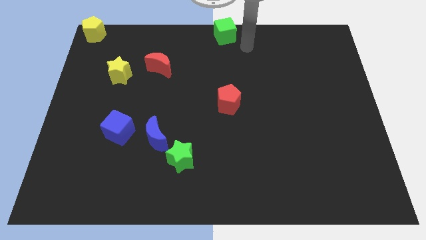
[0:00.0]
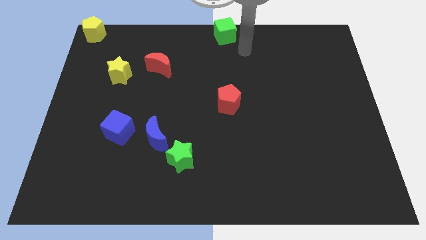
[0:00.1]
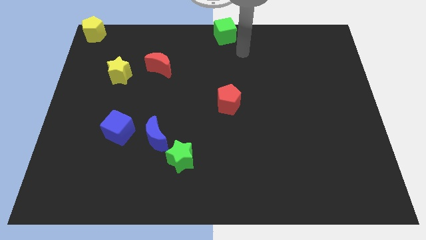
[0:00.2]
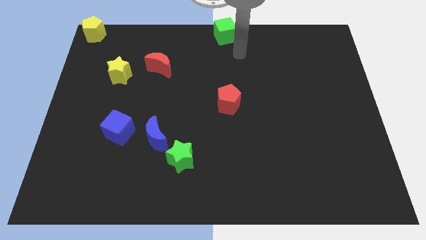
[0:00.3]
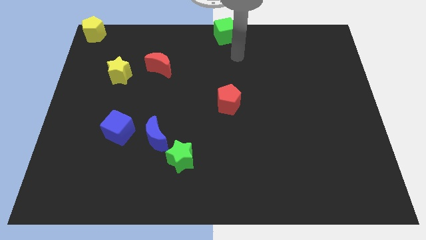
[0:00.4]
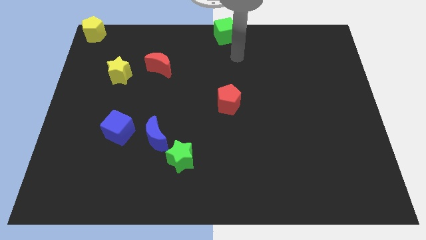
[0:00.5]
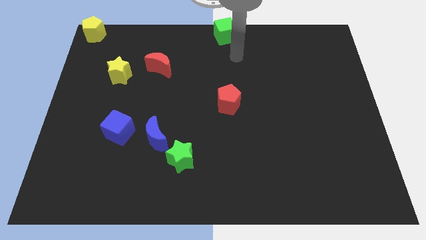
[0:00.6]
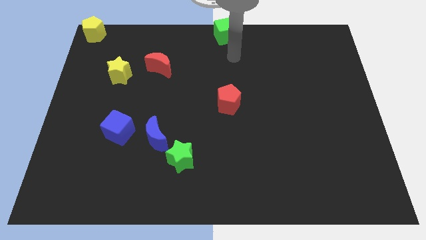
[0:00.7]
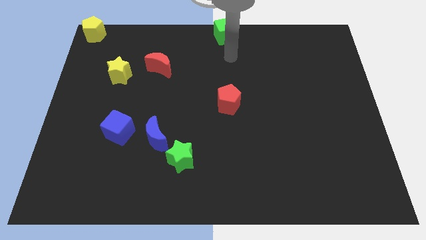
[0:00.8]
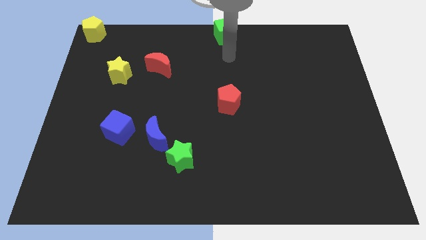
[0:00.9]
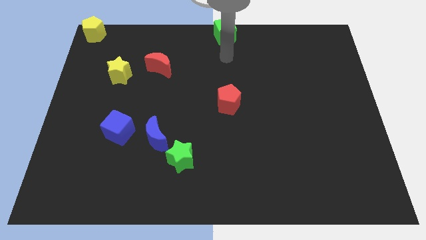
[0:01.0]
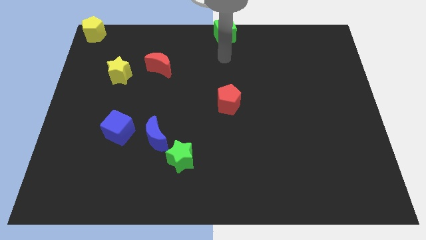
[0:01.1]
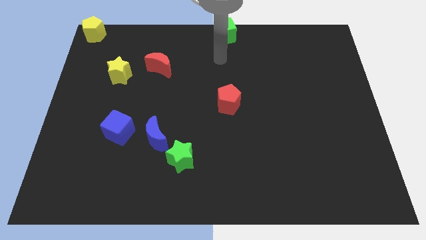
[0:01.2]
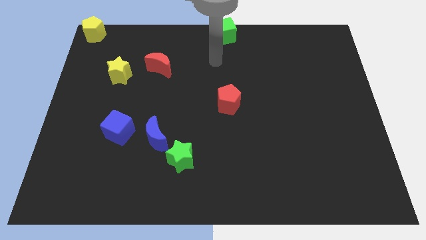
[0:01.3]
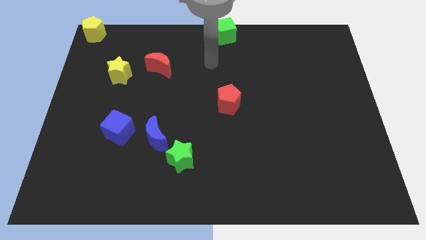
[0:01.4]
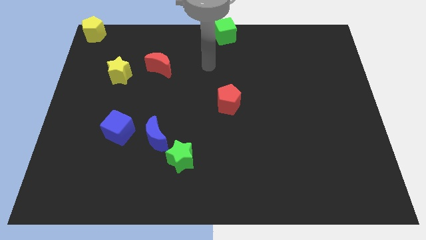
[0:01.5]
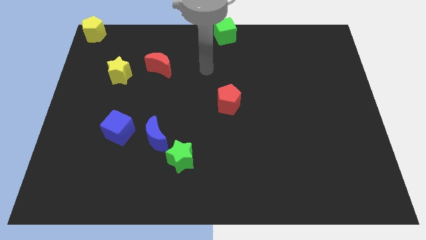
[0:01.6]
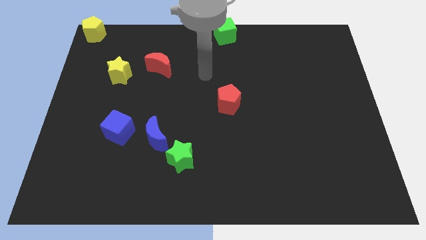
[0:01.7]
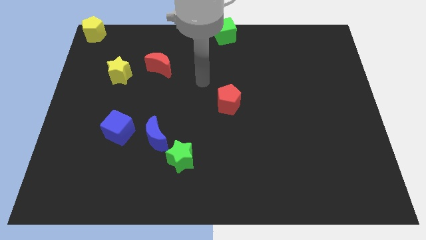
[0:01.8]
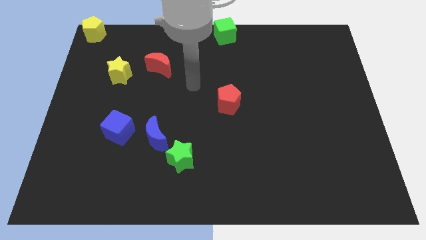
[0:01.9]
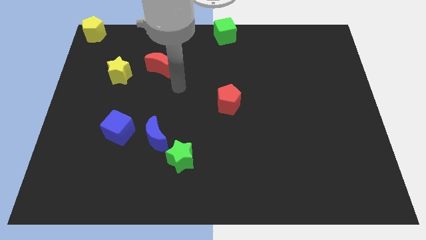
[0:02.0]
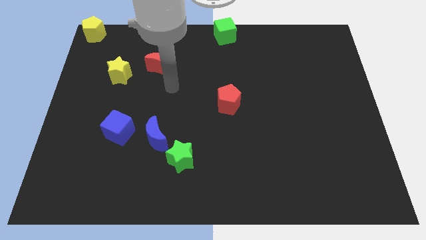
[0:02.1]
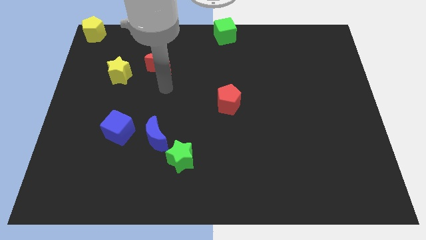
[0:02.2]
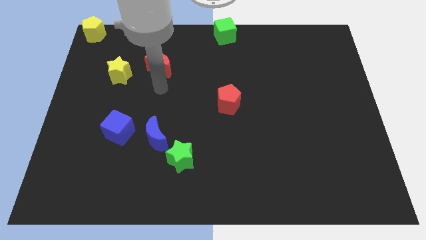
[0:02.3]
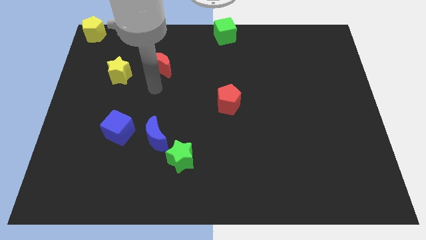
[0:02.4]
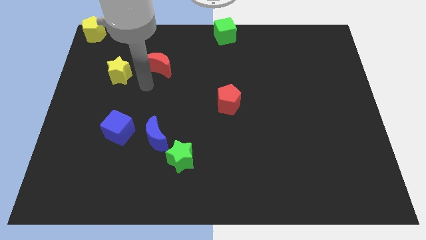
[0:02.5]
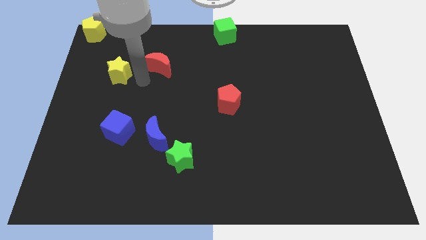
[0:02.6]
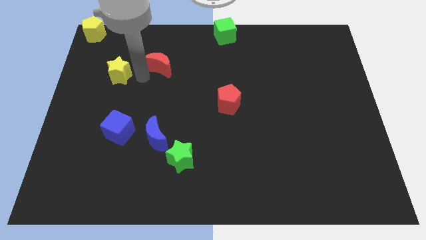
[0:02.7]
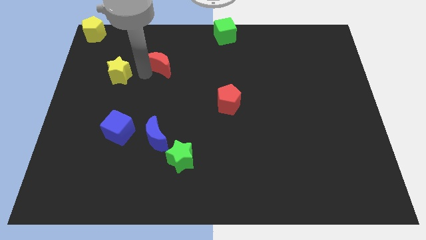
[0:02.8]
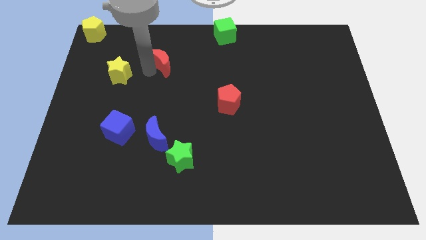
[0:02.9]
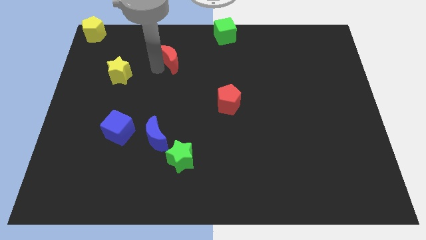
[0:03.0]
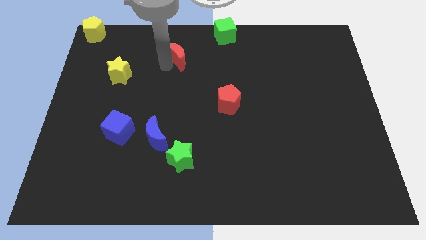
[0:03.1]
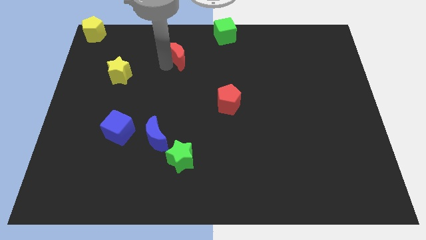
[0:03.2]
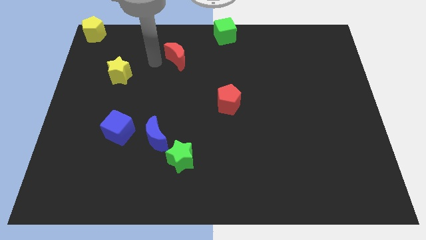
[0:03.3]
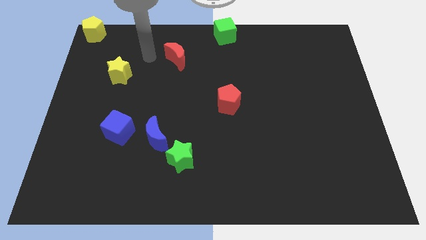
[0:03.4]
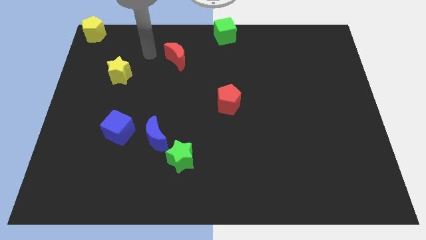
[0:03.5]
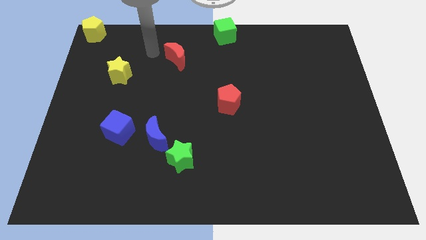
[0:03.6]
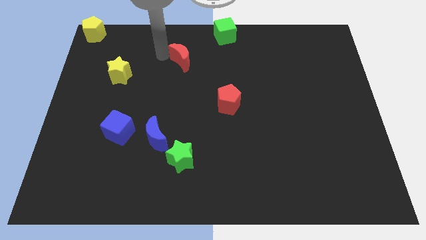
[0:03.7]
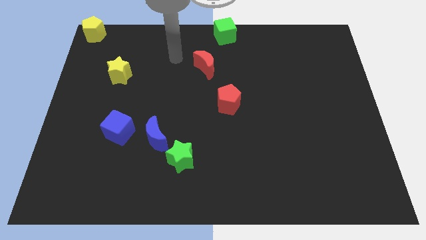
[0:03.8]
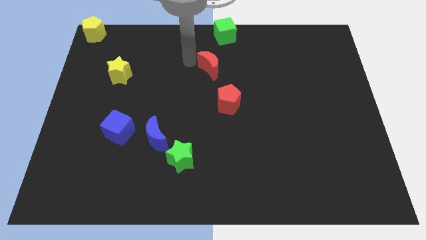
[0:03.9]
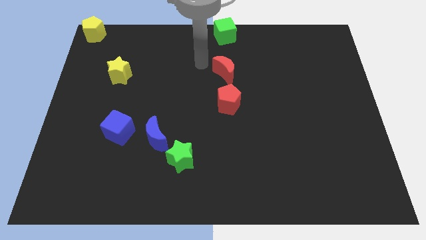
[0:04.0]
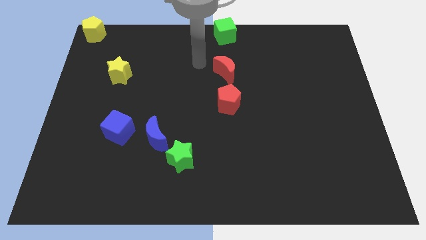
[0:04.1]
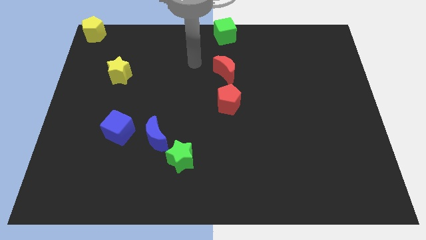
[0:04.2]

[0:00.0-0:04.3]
move red moon above red pentagon

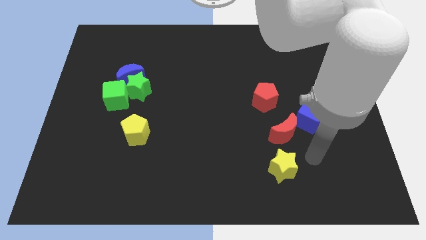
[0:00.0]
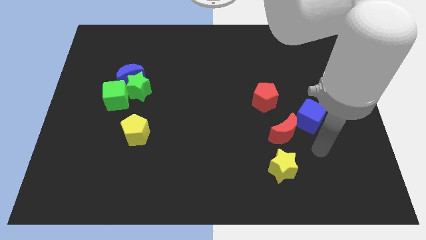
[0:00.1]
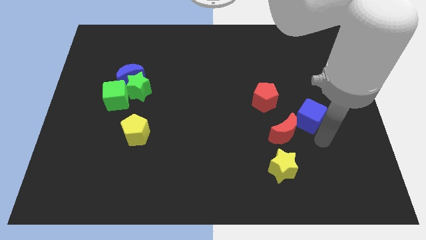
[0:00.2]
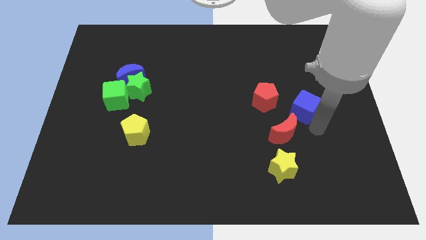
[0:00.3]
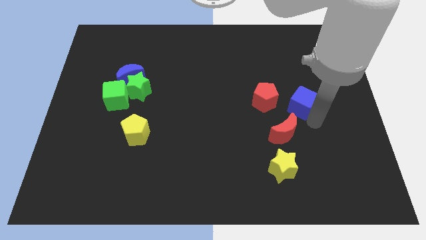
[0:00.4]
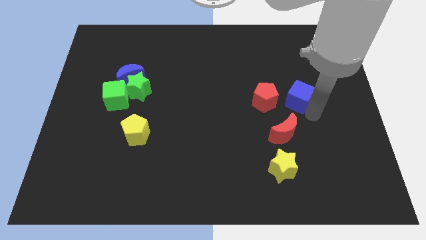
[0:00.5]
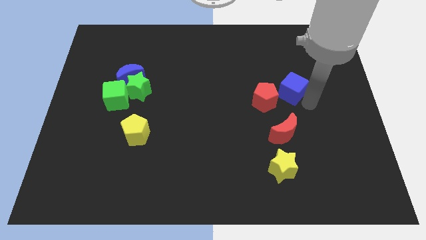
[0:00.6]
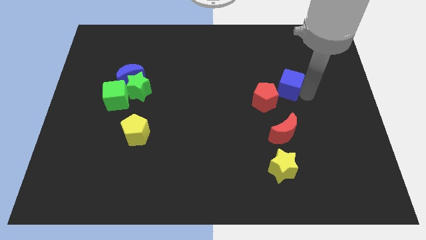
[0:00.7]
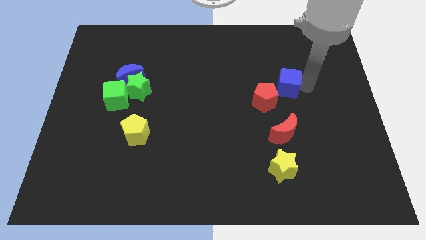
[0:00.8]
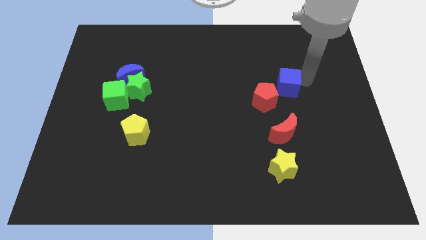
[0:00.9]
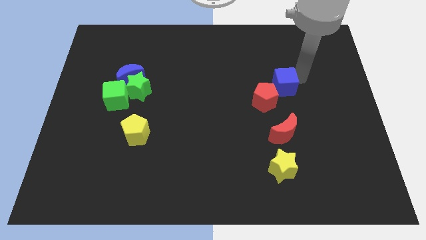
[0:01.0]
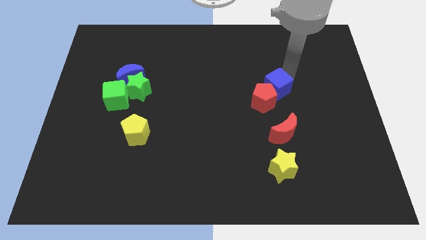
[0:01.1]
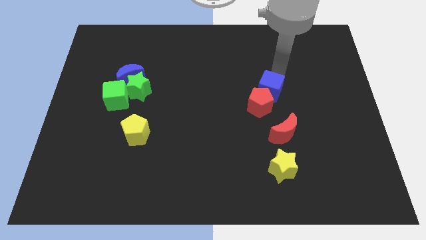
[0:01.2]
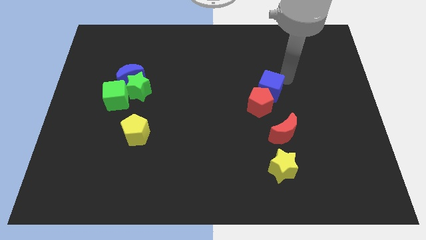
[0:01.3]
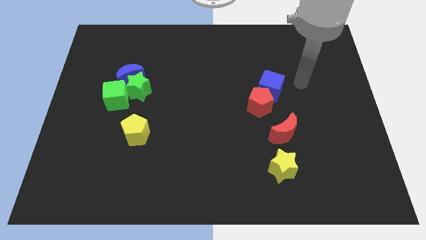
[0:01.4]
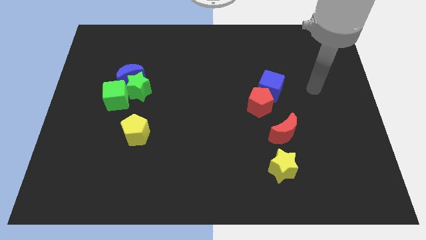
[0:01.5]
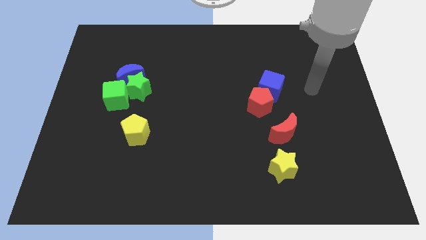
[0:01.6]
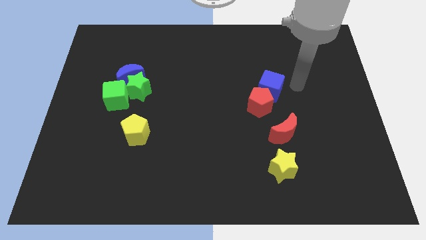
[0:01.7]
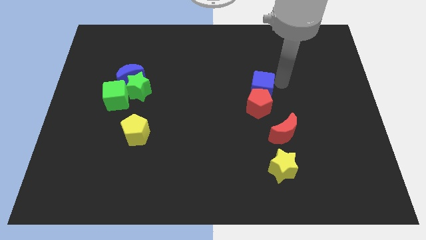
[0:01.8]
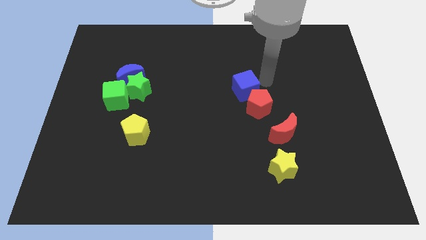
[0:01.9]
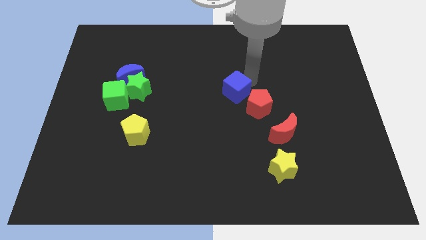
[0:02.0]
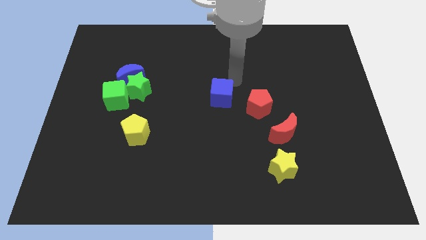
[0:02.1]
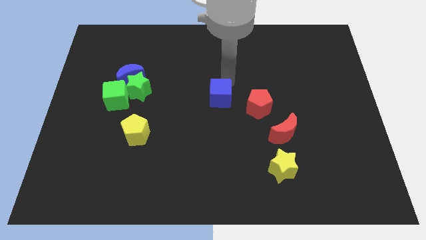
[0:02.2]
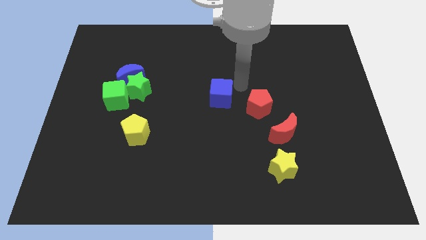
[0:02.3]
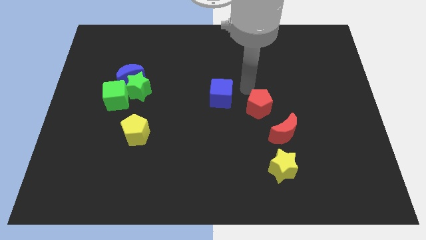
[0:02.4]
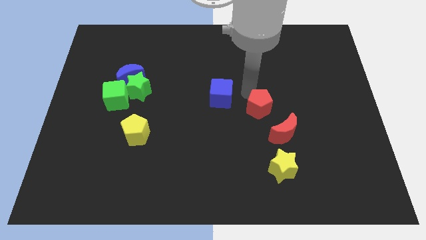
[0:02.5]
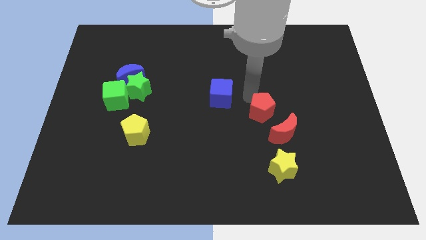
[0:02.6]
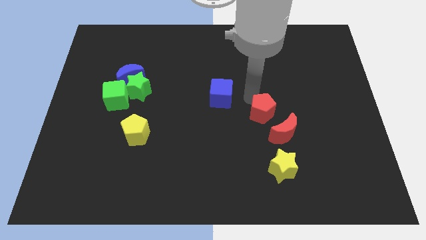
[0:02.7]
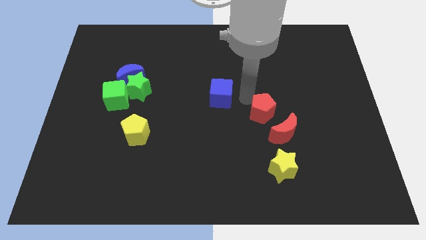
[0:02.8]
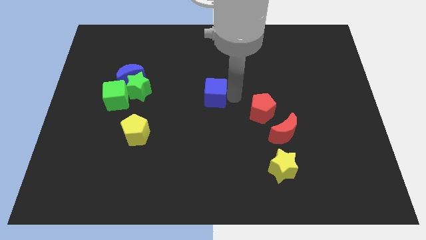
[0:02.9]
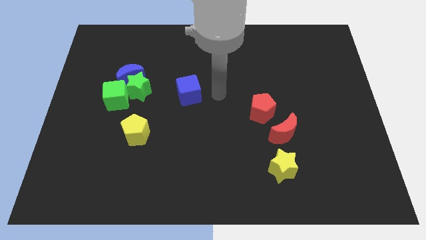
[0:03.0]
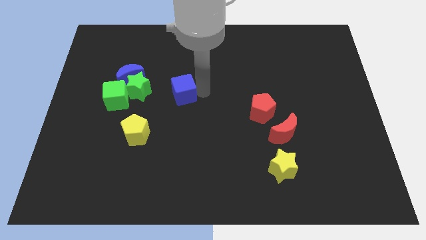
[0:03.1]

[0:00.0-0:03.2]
place the blue cube at the center of the board

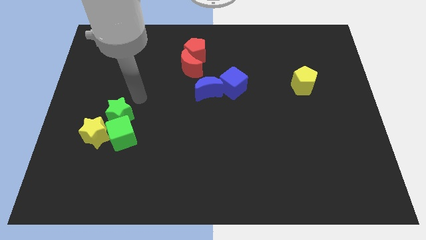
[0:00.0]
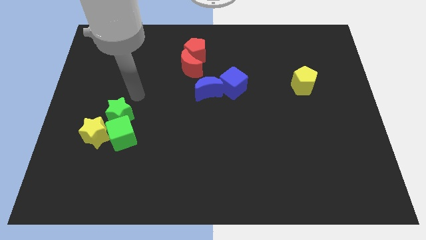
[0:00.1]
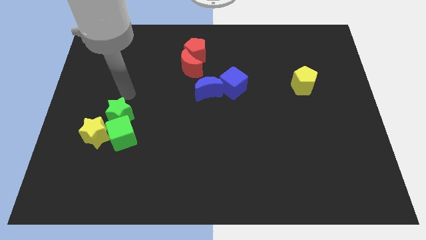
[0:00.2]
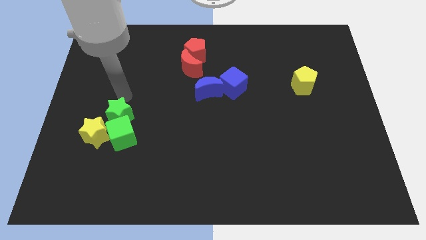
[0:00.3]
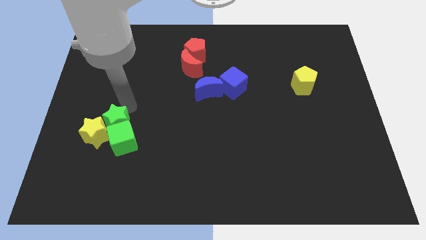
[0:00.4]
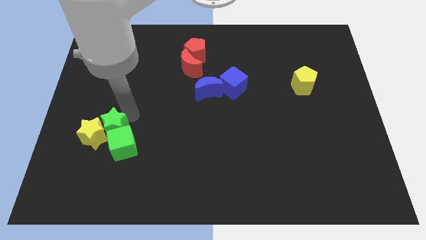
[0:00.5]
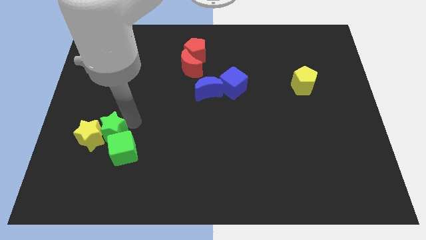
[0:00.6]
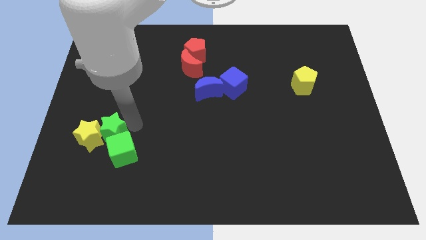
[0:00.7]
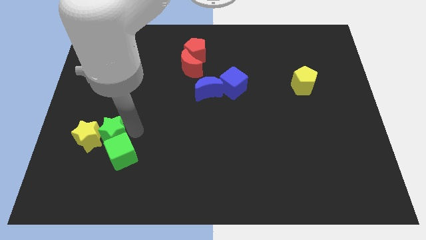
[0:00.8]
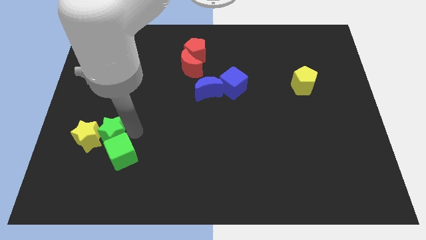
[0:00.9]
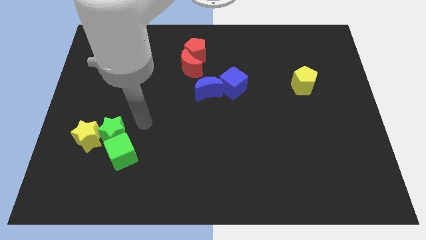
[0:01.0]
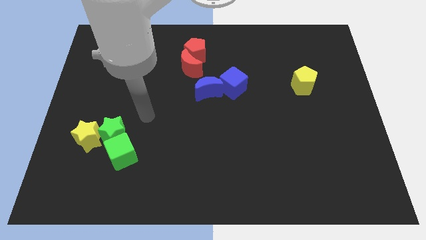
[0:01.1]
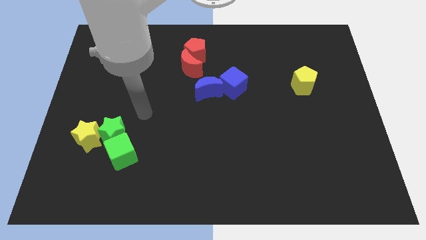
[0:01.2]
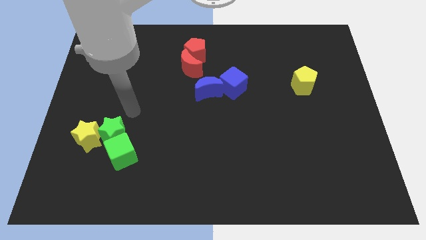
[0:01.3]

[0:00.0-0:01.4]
move the green star right to the yellow star
